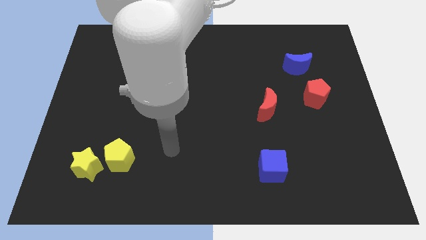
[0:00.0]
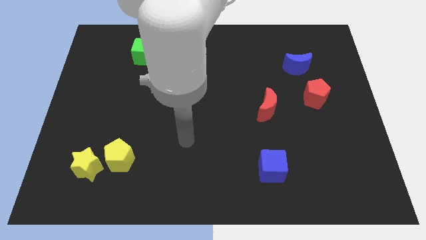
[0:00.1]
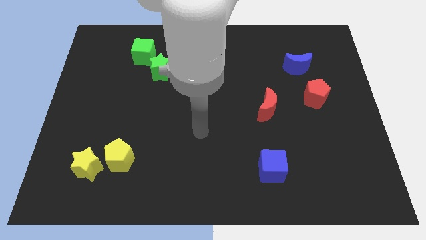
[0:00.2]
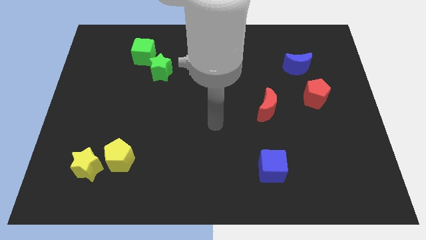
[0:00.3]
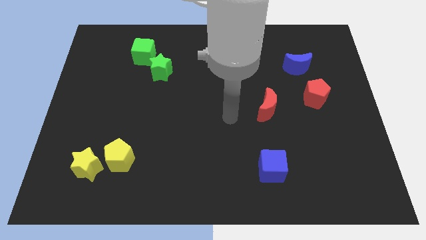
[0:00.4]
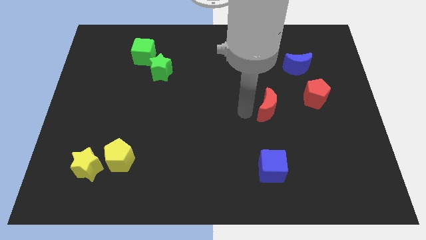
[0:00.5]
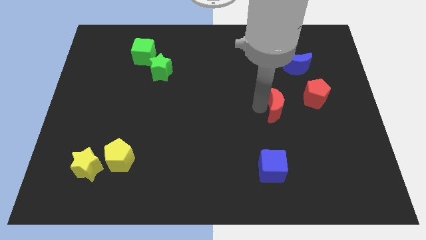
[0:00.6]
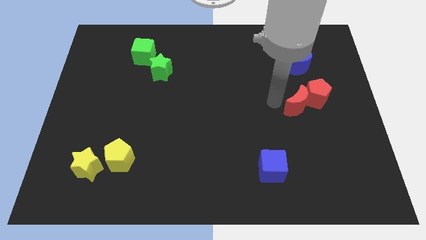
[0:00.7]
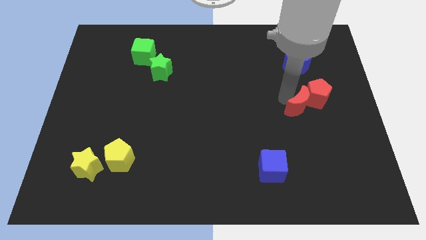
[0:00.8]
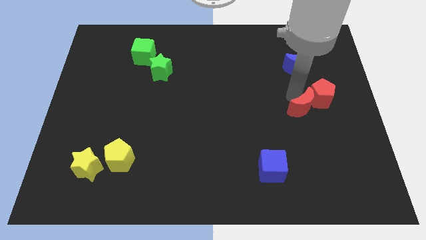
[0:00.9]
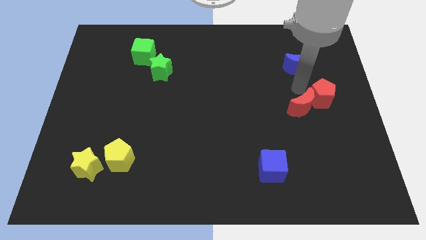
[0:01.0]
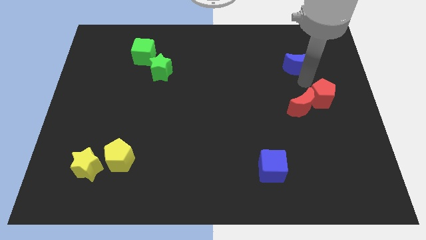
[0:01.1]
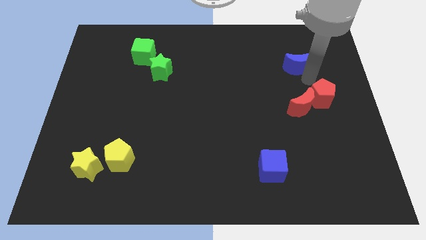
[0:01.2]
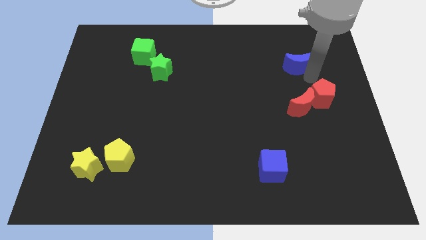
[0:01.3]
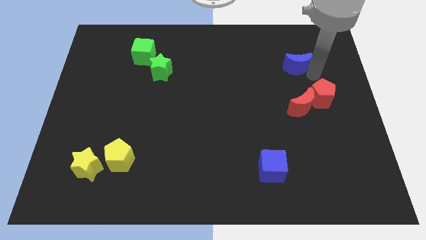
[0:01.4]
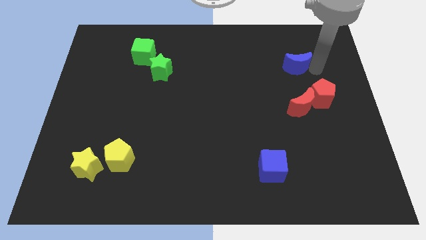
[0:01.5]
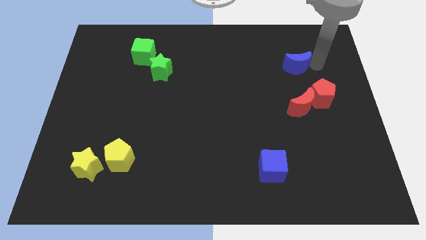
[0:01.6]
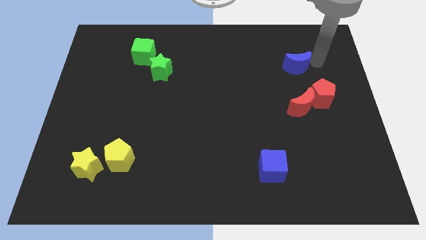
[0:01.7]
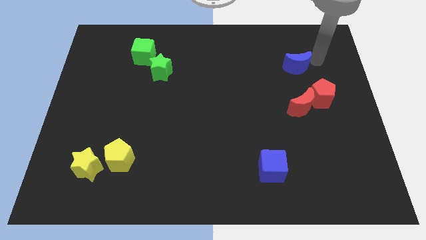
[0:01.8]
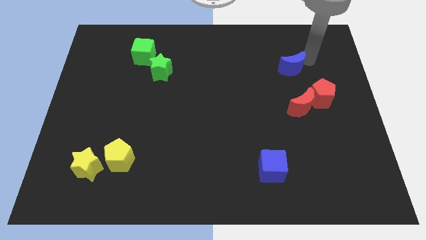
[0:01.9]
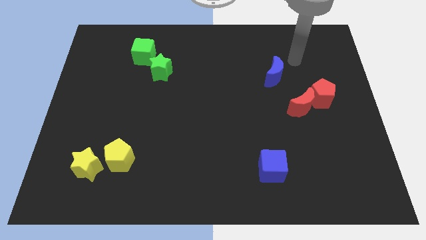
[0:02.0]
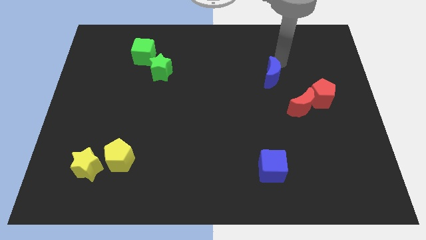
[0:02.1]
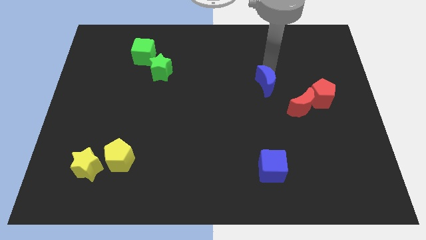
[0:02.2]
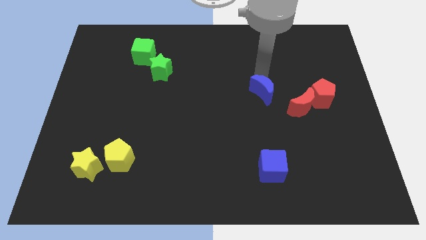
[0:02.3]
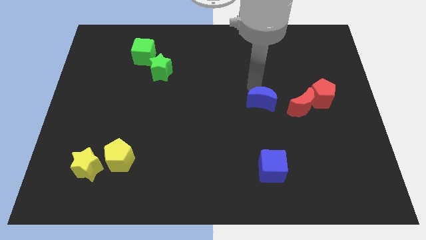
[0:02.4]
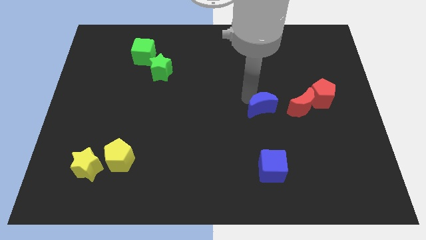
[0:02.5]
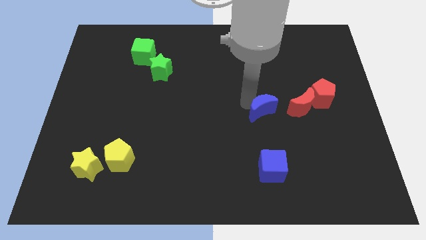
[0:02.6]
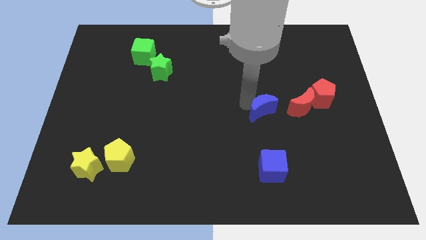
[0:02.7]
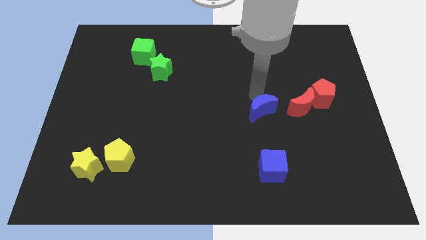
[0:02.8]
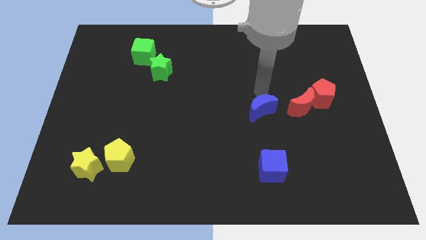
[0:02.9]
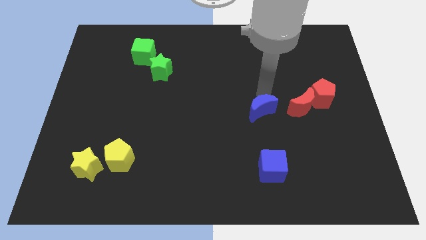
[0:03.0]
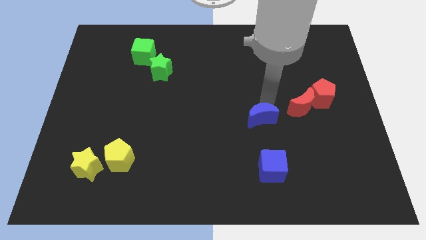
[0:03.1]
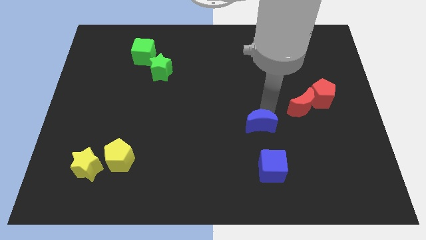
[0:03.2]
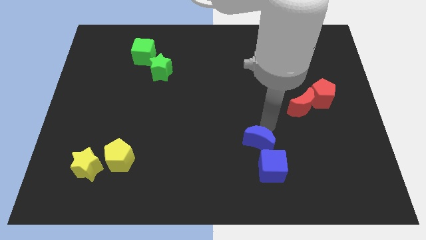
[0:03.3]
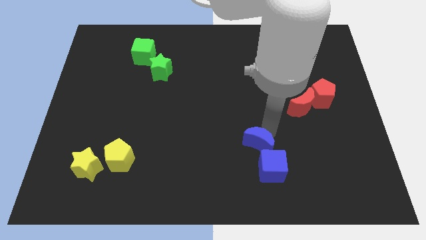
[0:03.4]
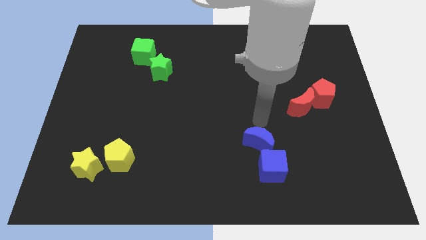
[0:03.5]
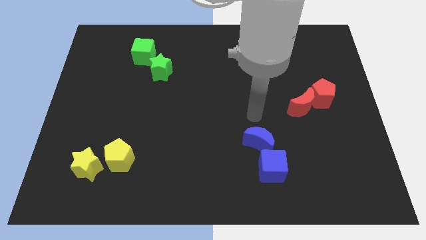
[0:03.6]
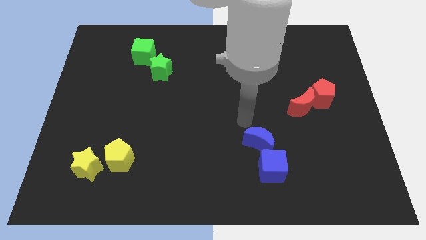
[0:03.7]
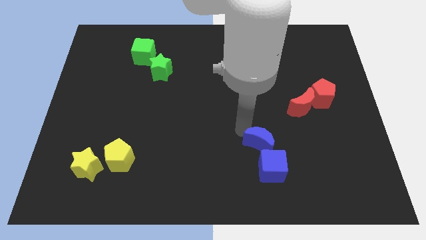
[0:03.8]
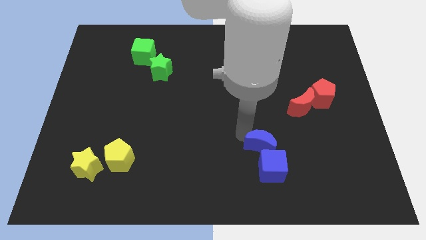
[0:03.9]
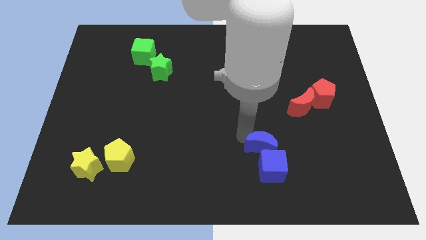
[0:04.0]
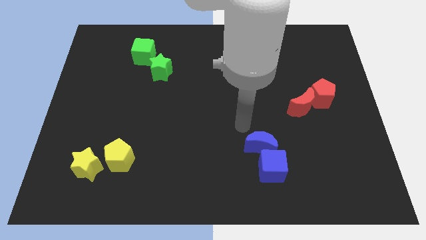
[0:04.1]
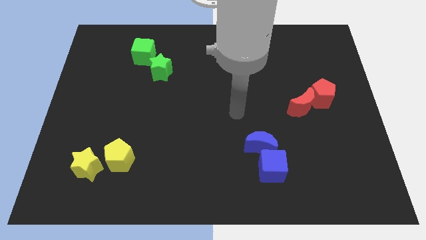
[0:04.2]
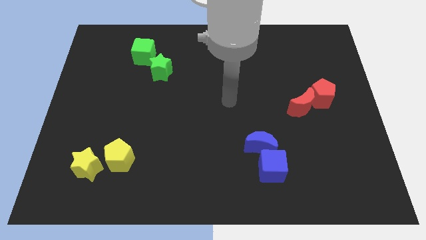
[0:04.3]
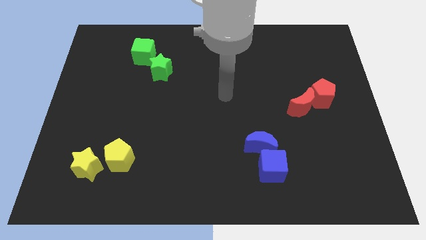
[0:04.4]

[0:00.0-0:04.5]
put the blue moon at the top of the blue cube

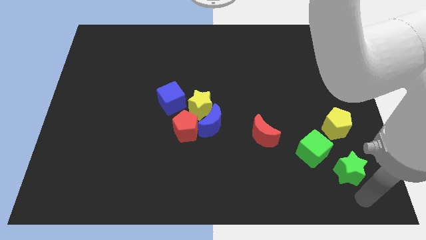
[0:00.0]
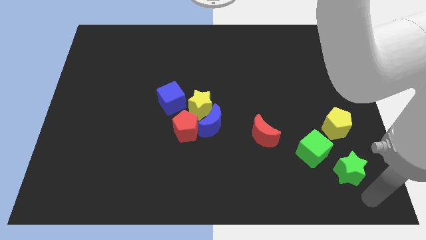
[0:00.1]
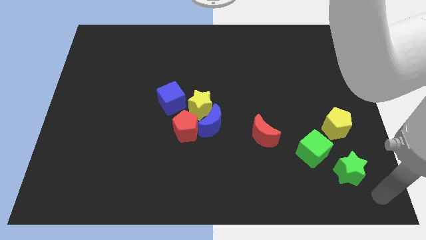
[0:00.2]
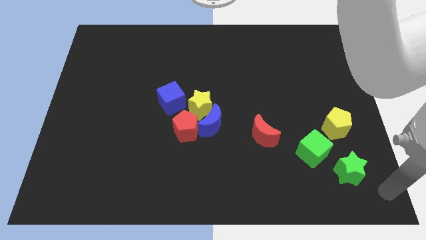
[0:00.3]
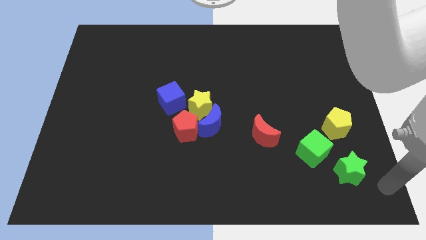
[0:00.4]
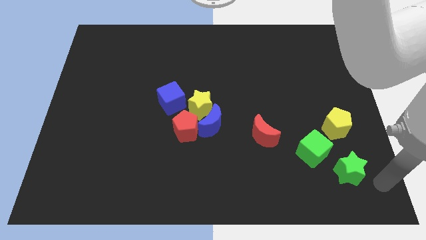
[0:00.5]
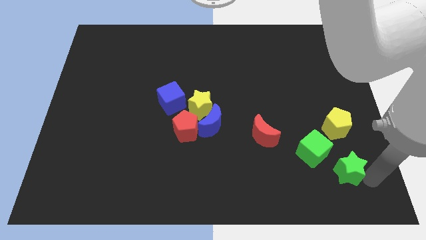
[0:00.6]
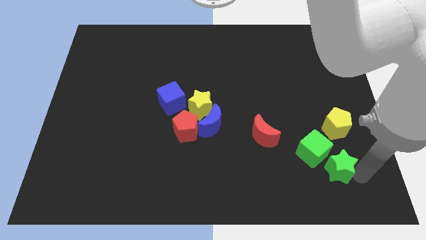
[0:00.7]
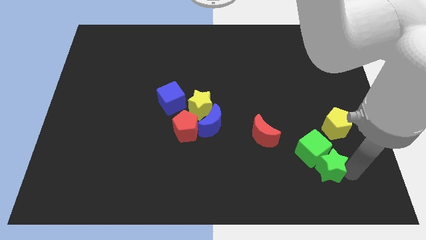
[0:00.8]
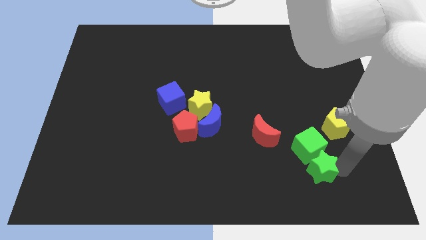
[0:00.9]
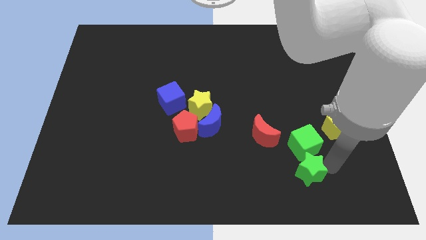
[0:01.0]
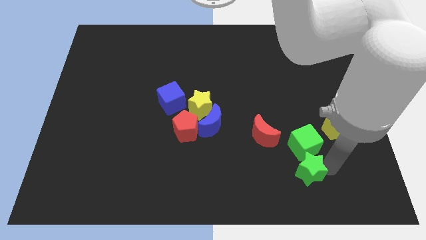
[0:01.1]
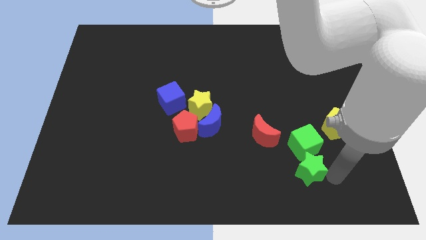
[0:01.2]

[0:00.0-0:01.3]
move green star below green cube

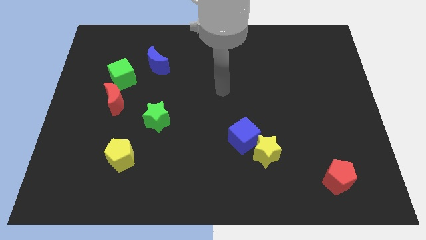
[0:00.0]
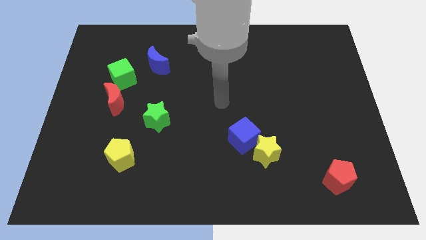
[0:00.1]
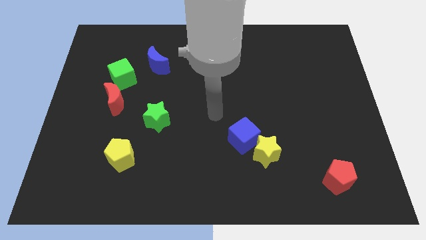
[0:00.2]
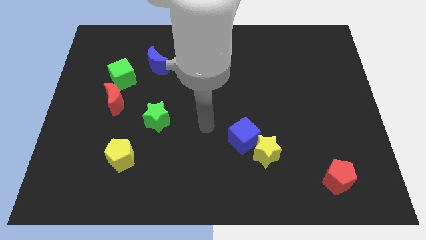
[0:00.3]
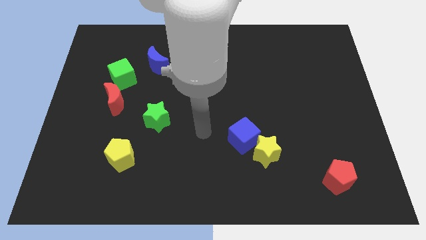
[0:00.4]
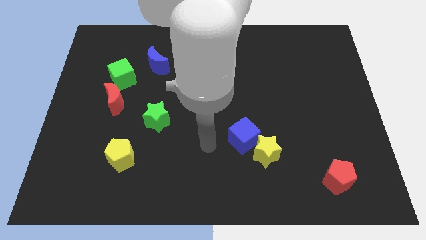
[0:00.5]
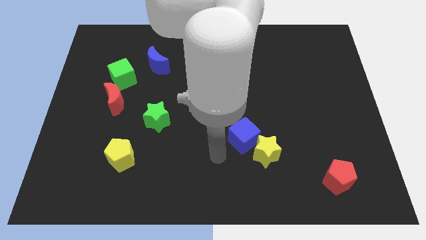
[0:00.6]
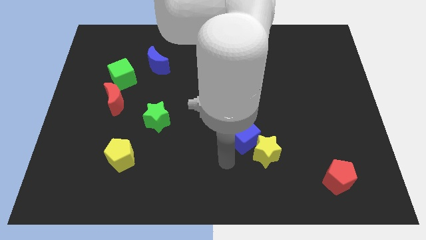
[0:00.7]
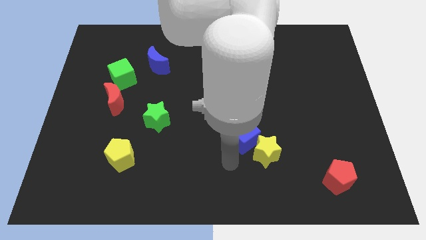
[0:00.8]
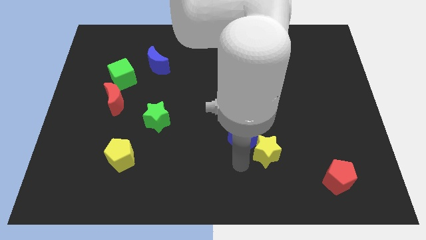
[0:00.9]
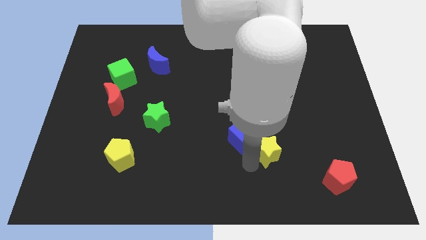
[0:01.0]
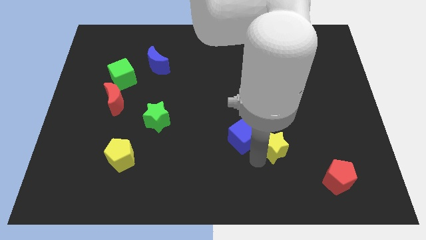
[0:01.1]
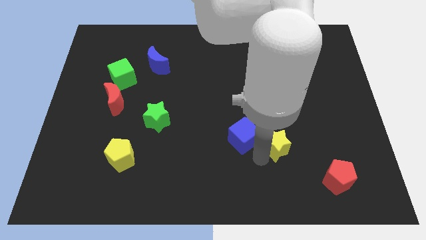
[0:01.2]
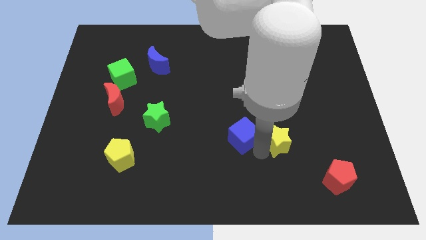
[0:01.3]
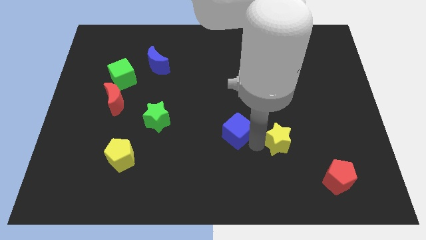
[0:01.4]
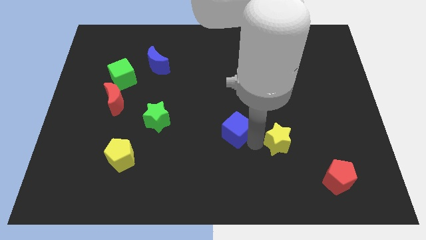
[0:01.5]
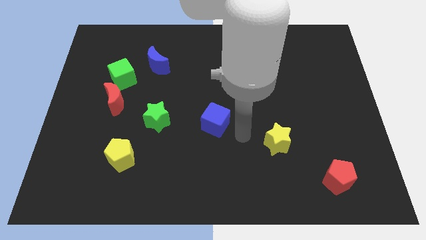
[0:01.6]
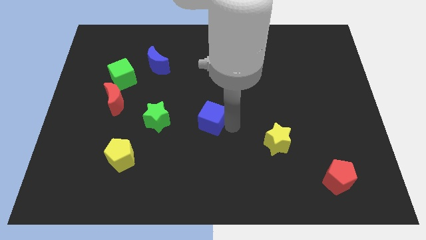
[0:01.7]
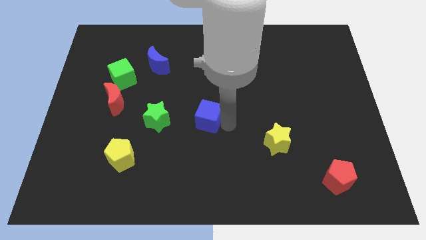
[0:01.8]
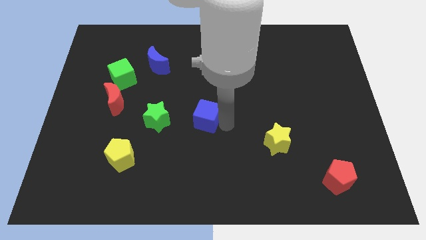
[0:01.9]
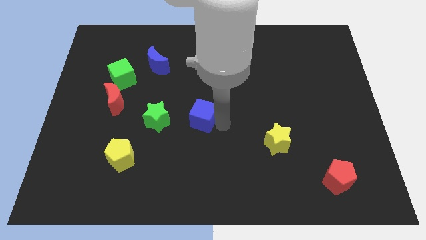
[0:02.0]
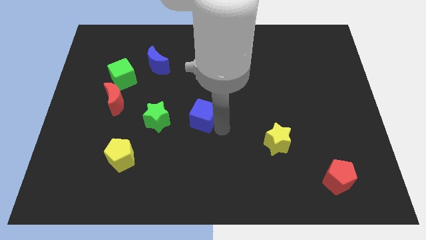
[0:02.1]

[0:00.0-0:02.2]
move the blue cube right to the green star

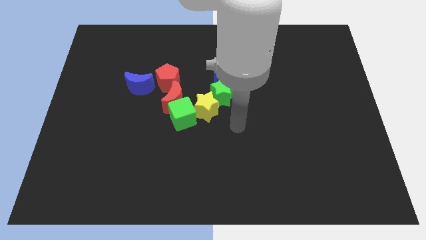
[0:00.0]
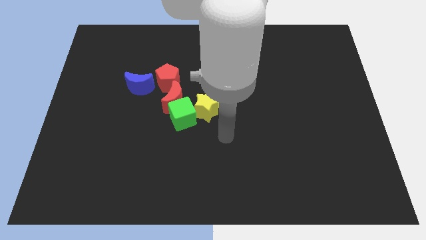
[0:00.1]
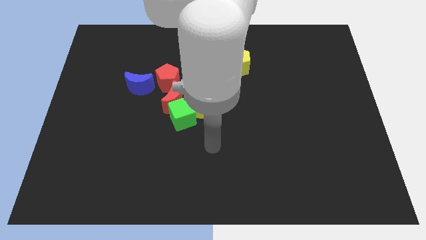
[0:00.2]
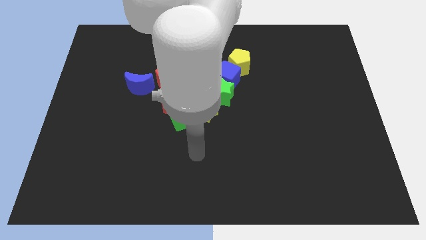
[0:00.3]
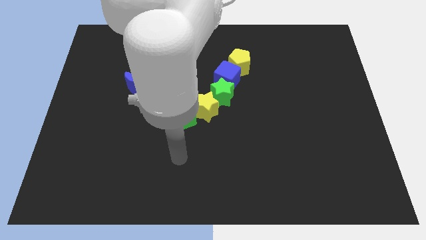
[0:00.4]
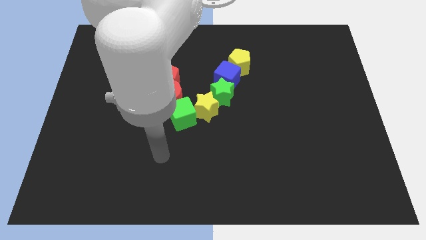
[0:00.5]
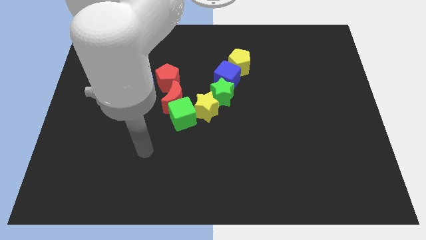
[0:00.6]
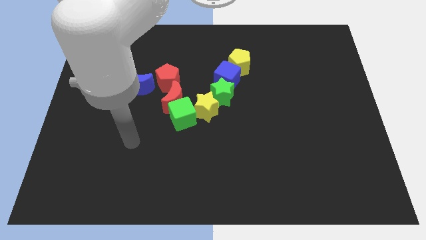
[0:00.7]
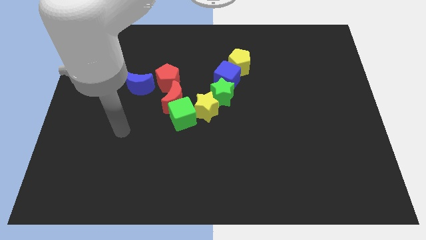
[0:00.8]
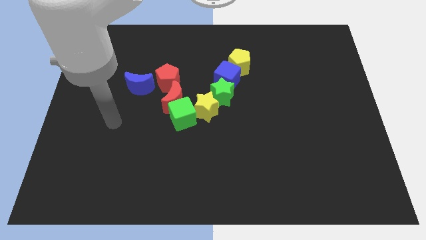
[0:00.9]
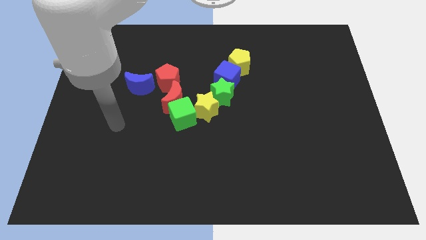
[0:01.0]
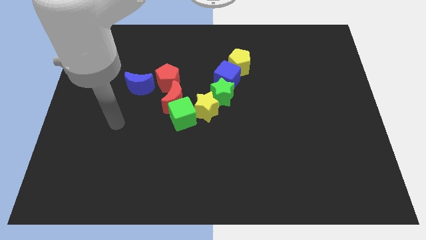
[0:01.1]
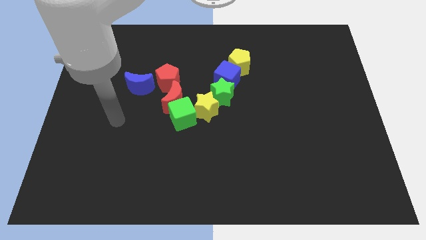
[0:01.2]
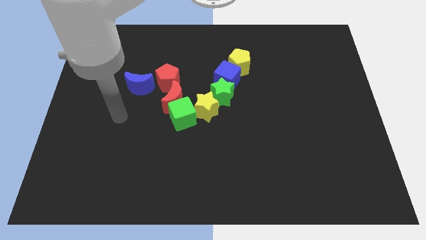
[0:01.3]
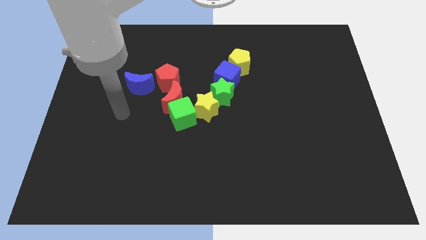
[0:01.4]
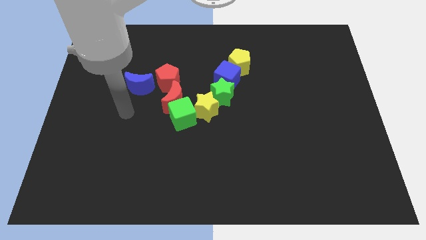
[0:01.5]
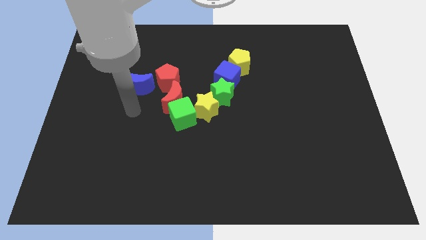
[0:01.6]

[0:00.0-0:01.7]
move your arm towards blue crescent
